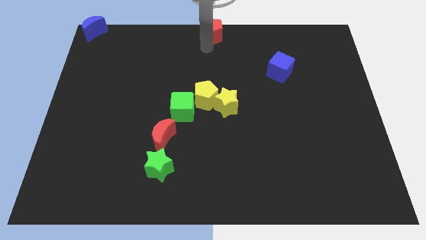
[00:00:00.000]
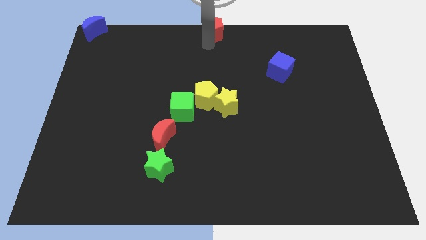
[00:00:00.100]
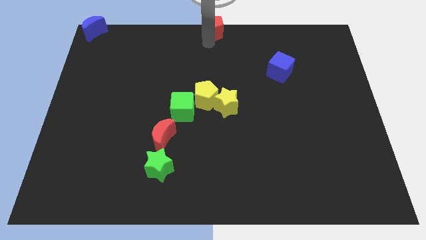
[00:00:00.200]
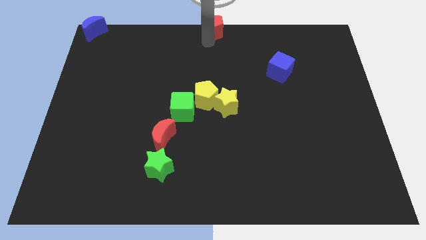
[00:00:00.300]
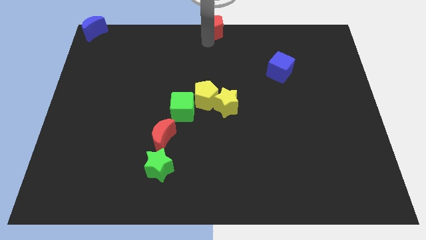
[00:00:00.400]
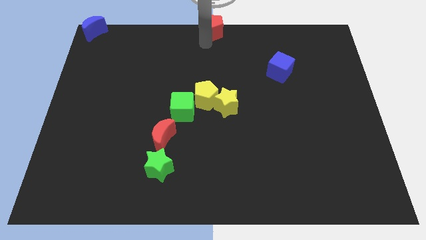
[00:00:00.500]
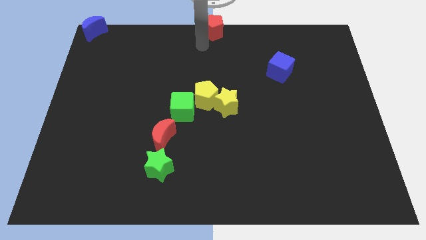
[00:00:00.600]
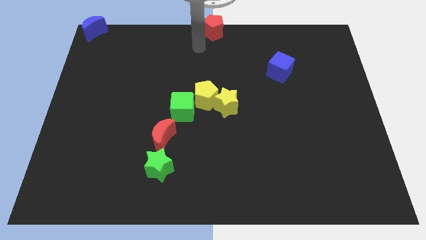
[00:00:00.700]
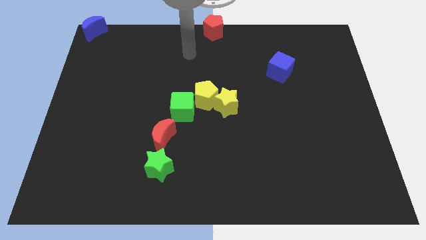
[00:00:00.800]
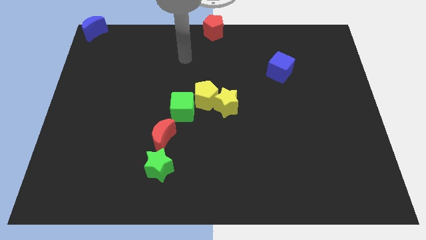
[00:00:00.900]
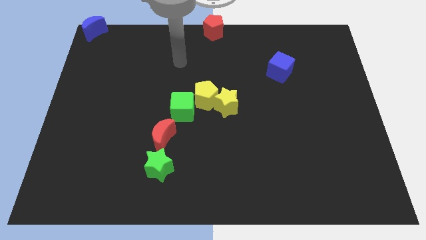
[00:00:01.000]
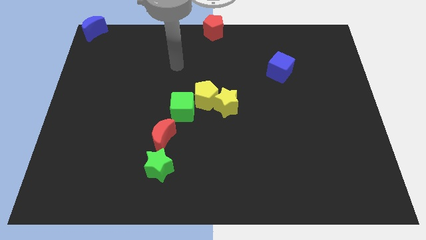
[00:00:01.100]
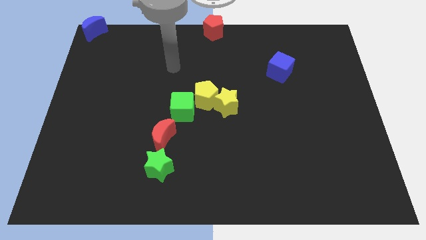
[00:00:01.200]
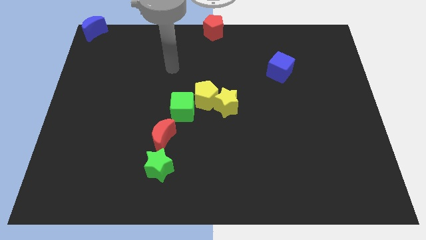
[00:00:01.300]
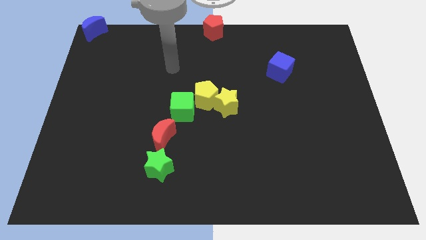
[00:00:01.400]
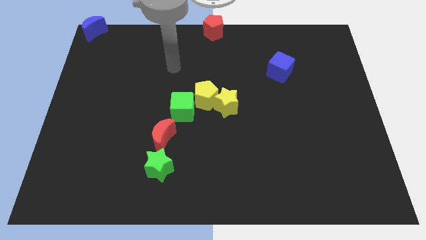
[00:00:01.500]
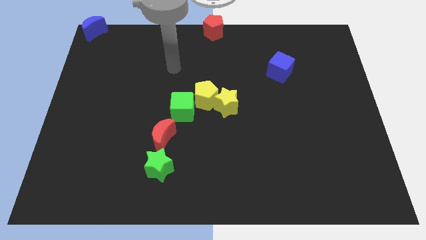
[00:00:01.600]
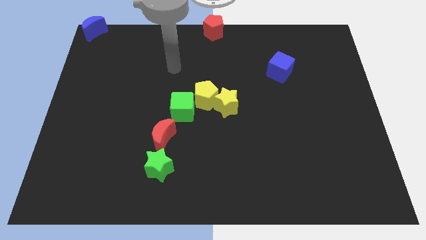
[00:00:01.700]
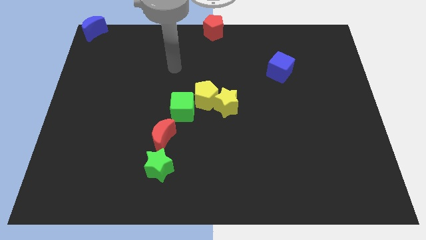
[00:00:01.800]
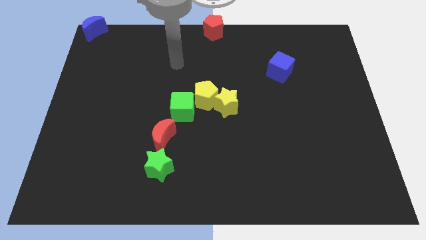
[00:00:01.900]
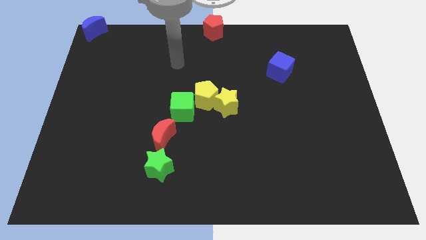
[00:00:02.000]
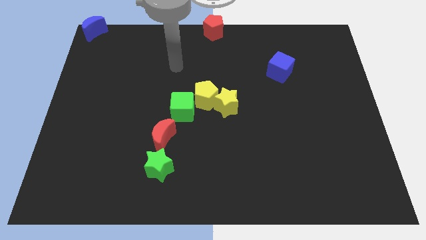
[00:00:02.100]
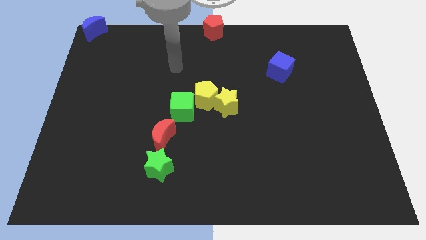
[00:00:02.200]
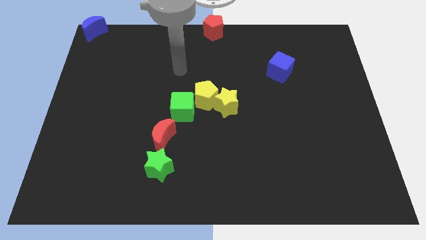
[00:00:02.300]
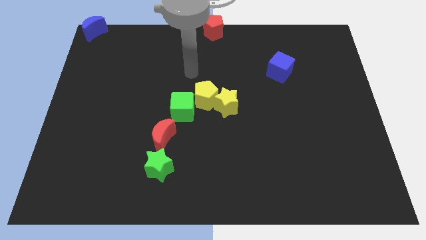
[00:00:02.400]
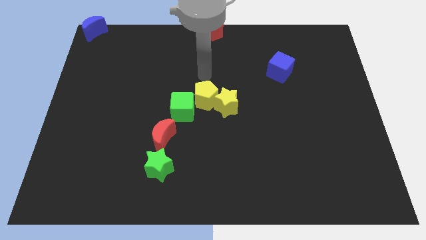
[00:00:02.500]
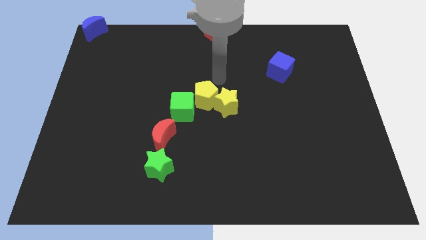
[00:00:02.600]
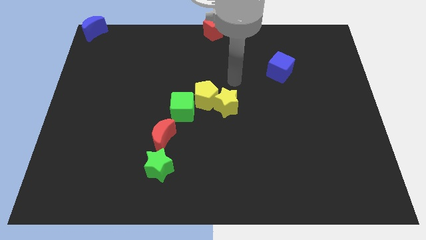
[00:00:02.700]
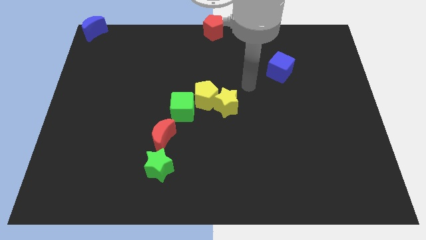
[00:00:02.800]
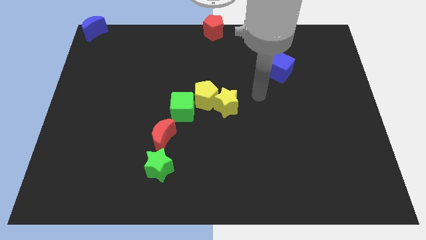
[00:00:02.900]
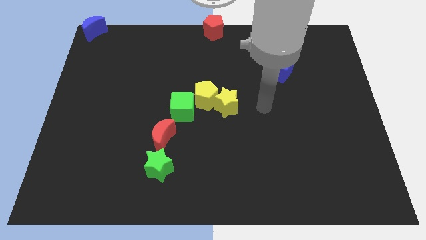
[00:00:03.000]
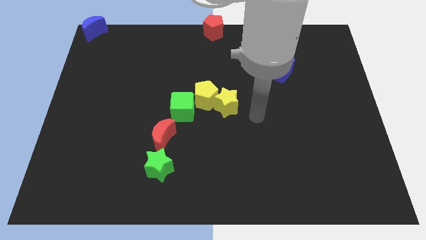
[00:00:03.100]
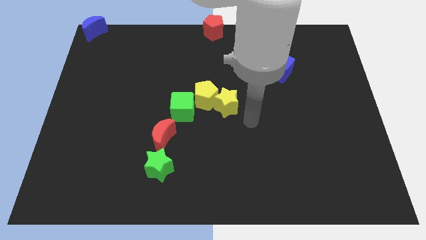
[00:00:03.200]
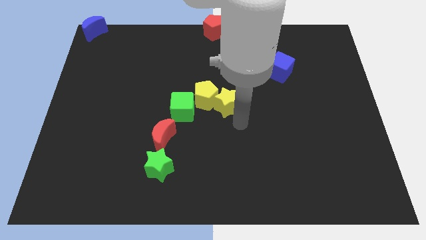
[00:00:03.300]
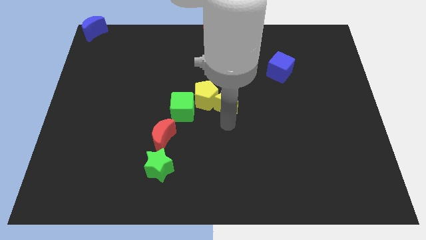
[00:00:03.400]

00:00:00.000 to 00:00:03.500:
move your arm to the bottom of the yellow star

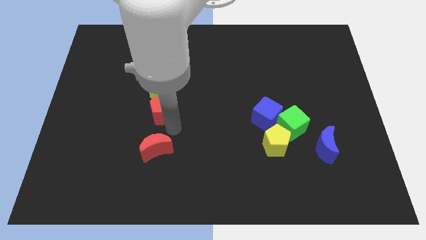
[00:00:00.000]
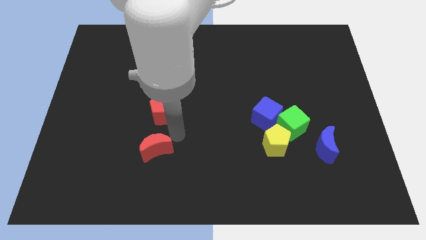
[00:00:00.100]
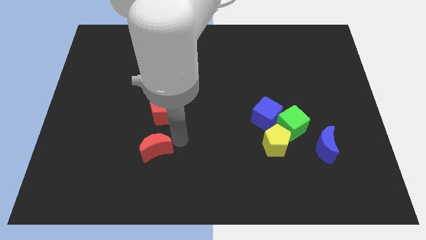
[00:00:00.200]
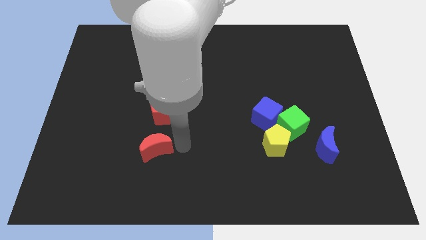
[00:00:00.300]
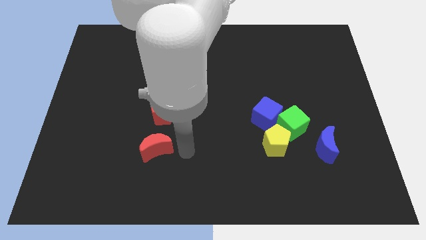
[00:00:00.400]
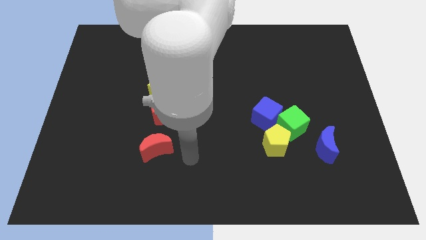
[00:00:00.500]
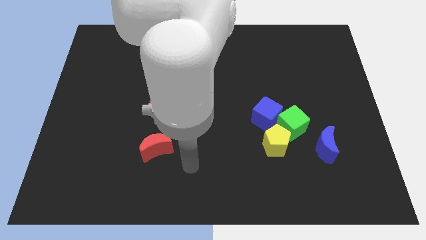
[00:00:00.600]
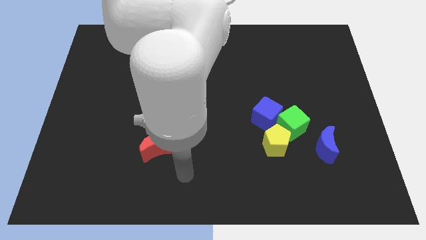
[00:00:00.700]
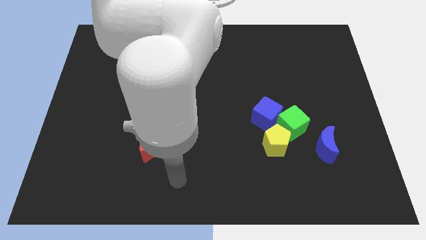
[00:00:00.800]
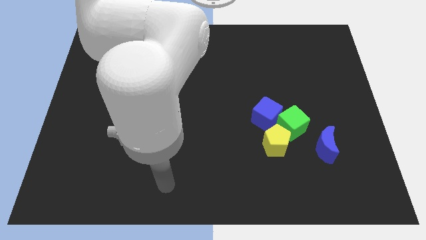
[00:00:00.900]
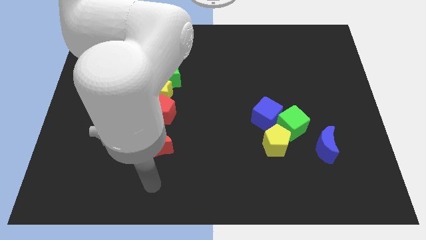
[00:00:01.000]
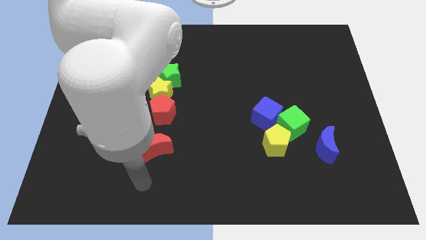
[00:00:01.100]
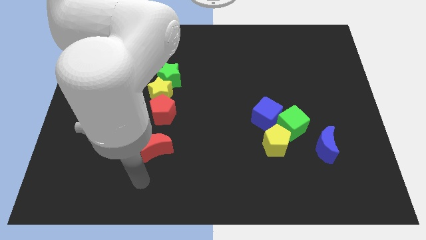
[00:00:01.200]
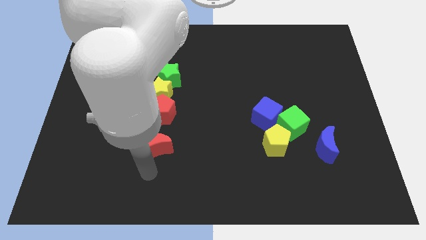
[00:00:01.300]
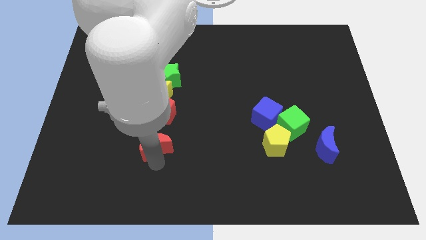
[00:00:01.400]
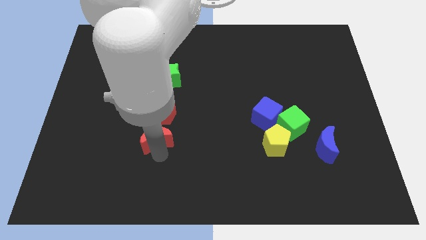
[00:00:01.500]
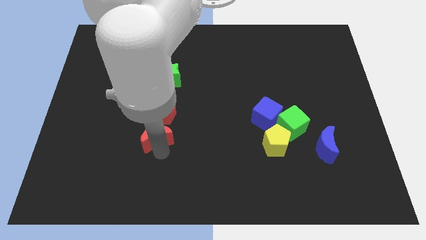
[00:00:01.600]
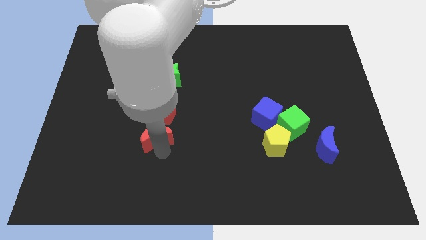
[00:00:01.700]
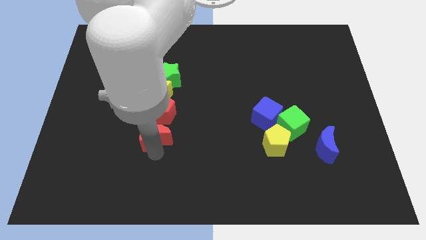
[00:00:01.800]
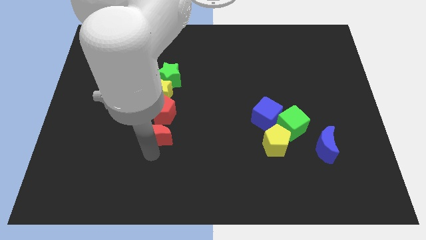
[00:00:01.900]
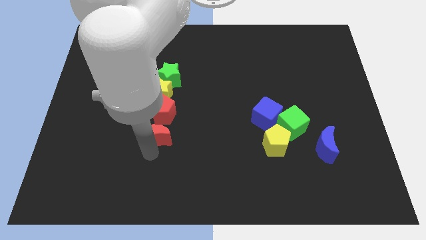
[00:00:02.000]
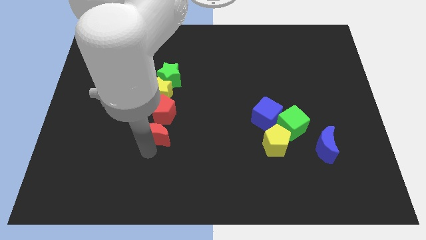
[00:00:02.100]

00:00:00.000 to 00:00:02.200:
slide the red moon slightly towards the bottom side of the red pentagon

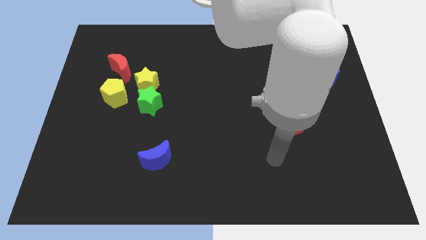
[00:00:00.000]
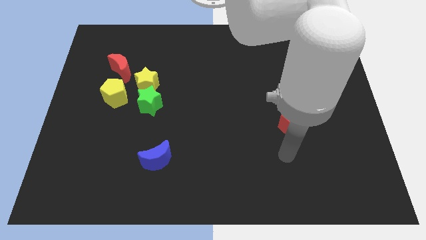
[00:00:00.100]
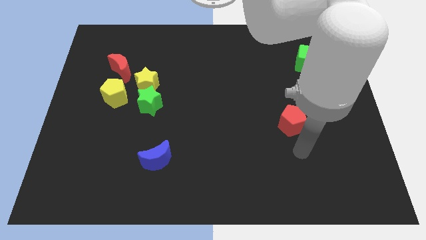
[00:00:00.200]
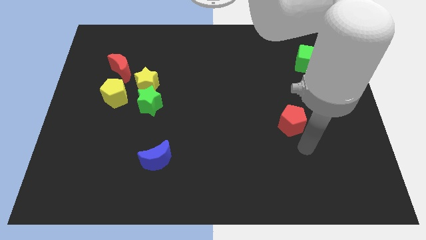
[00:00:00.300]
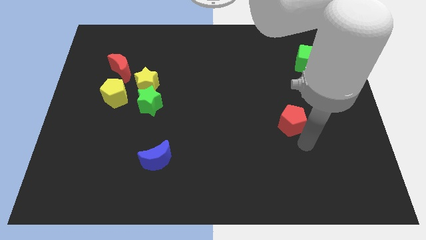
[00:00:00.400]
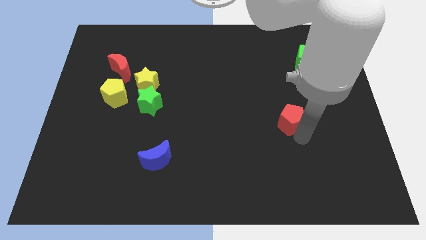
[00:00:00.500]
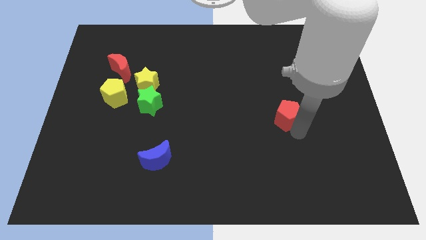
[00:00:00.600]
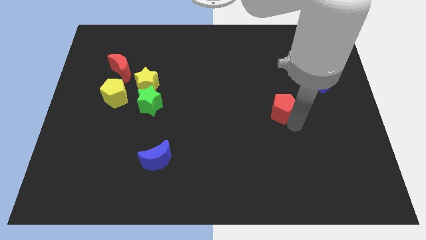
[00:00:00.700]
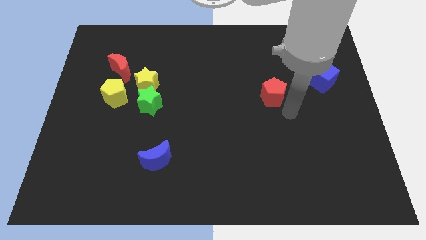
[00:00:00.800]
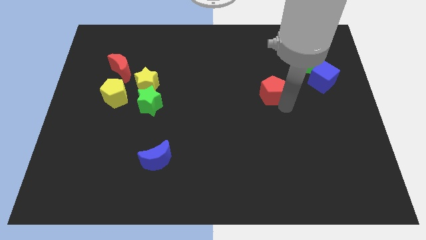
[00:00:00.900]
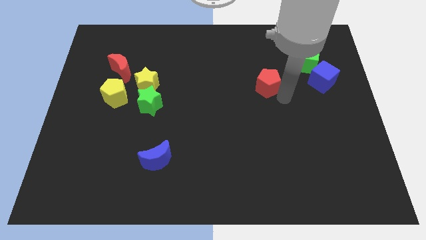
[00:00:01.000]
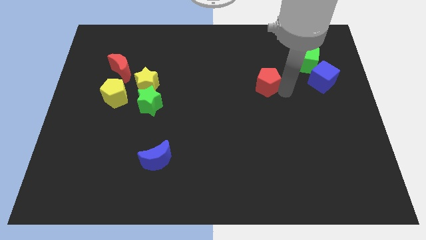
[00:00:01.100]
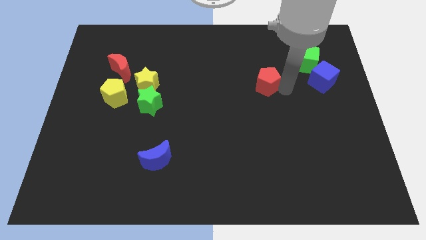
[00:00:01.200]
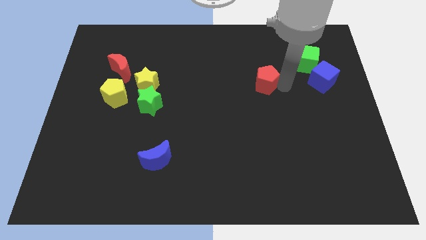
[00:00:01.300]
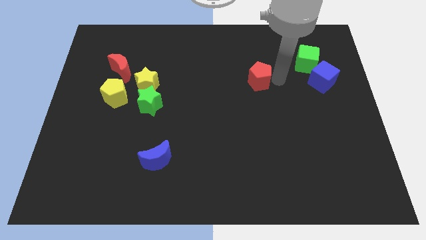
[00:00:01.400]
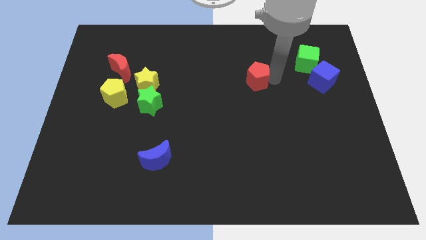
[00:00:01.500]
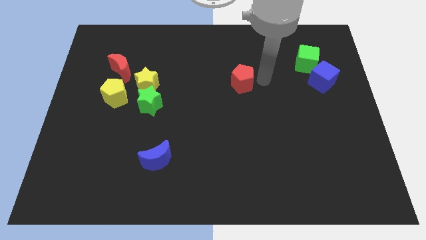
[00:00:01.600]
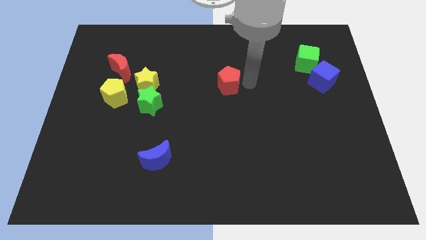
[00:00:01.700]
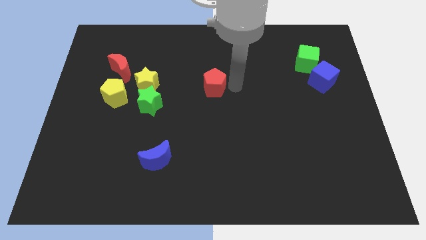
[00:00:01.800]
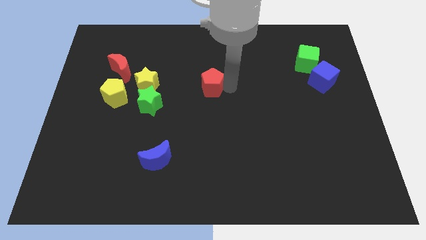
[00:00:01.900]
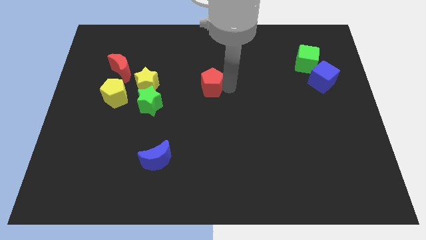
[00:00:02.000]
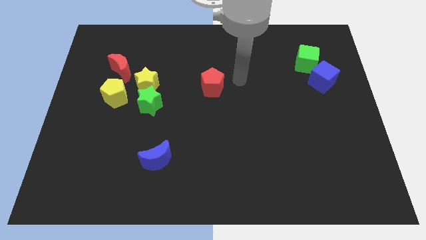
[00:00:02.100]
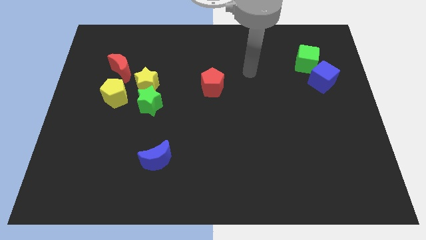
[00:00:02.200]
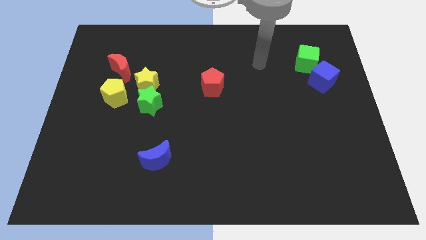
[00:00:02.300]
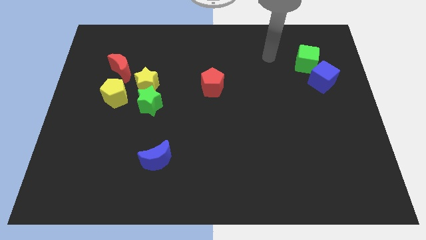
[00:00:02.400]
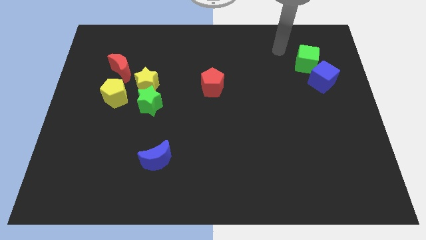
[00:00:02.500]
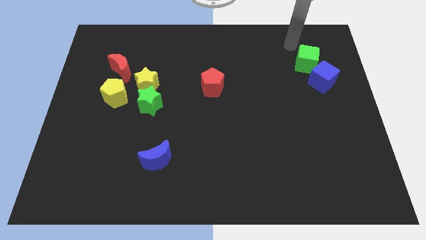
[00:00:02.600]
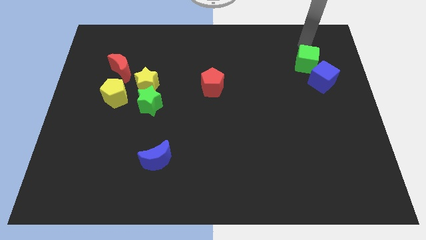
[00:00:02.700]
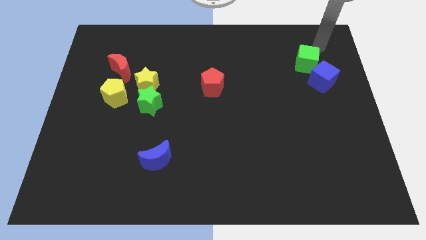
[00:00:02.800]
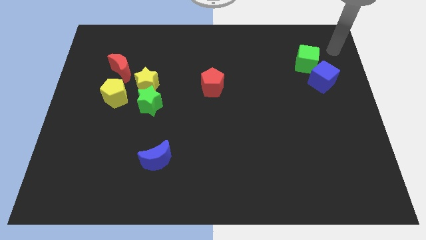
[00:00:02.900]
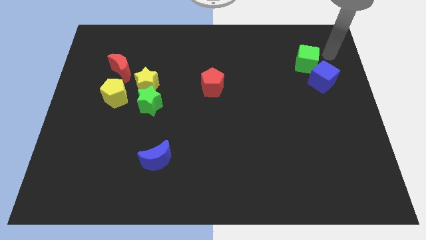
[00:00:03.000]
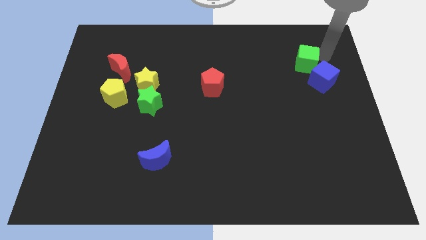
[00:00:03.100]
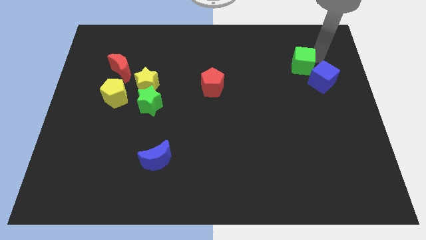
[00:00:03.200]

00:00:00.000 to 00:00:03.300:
move the red pentagon parallel to the right of yellow star
